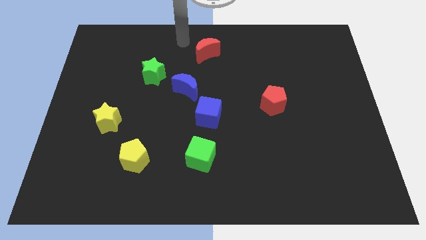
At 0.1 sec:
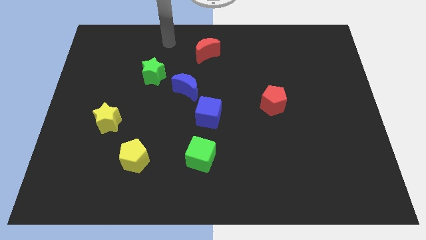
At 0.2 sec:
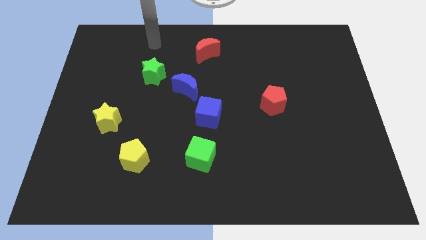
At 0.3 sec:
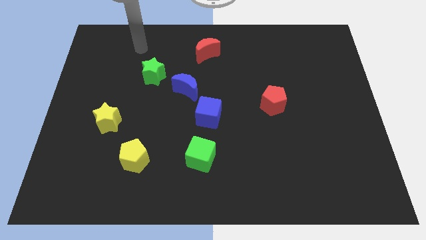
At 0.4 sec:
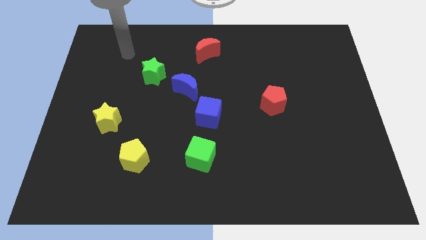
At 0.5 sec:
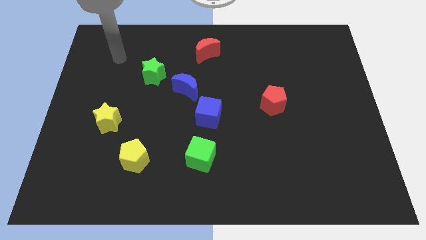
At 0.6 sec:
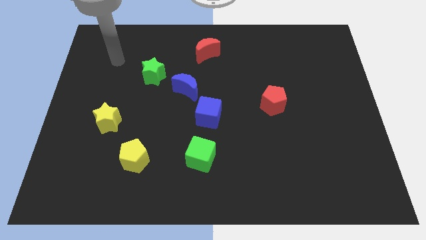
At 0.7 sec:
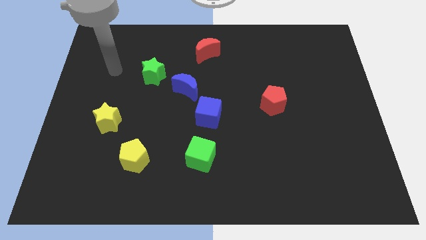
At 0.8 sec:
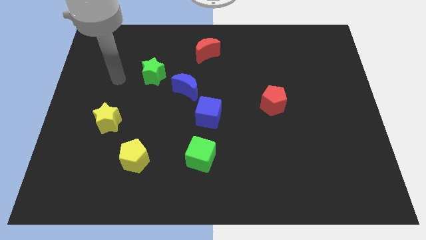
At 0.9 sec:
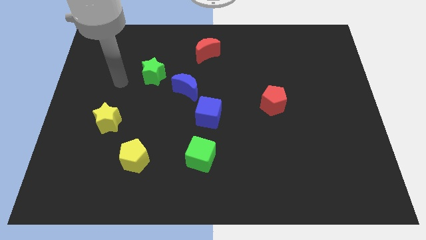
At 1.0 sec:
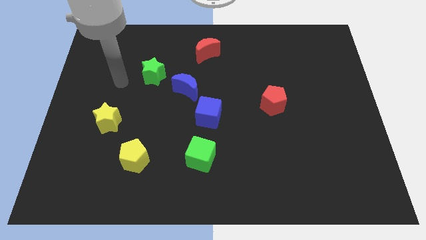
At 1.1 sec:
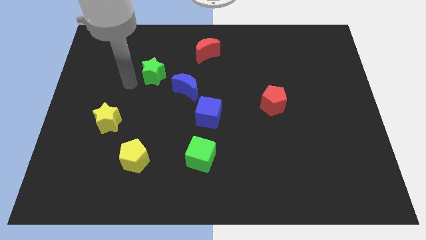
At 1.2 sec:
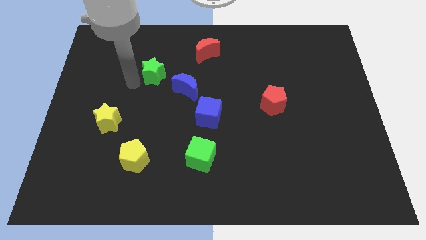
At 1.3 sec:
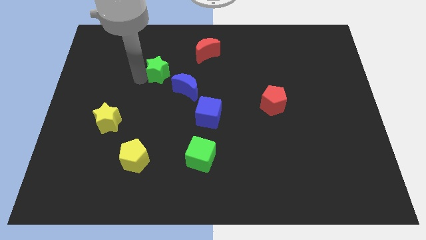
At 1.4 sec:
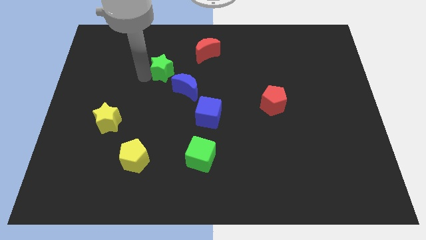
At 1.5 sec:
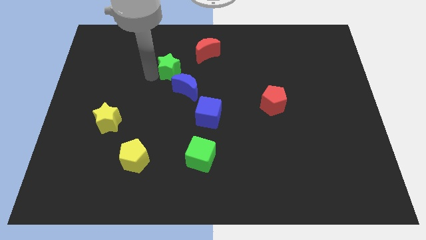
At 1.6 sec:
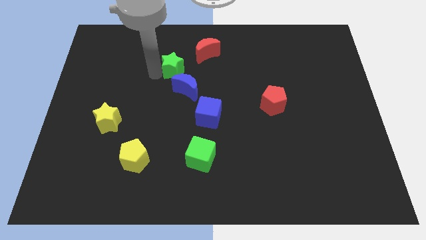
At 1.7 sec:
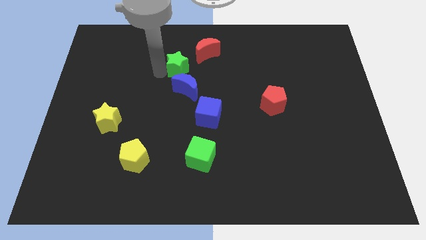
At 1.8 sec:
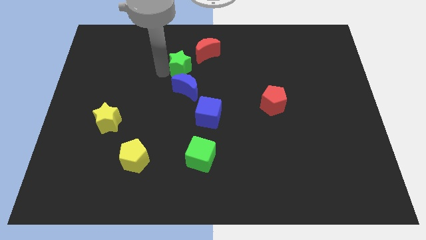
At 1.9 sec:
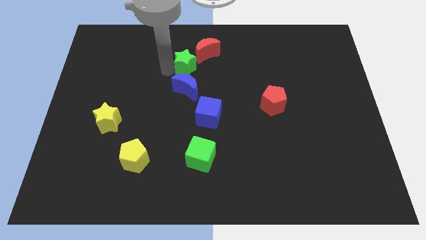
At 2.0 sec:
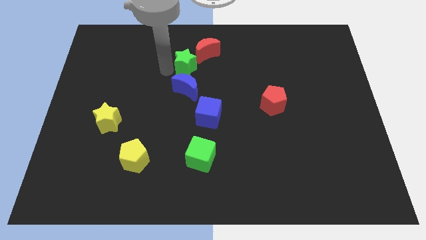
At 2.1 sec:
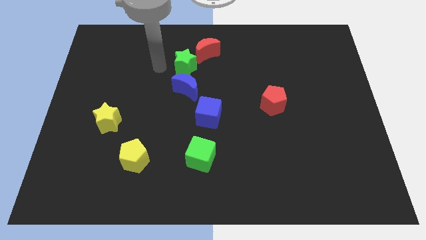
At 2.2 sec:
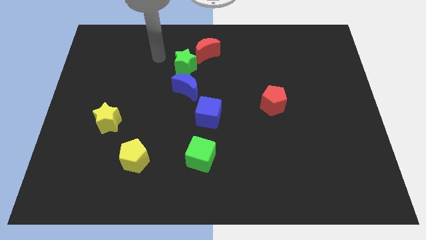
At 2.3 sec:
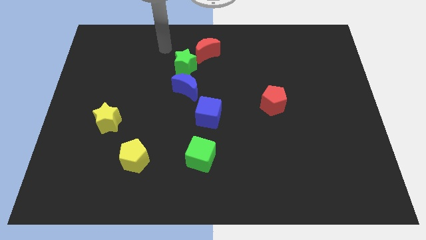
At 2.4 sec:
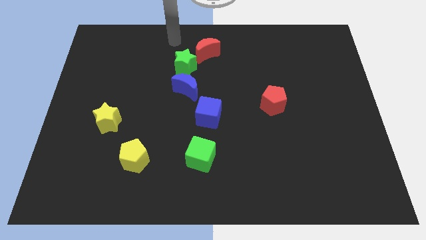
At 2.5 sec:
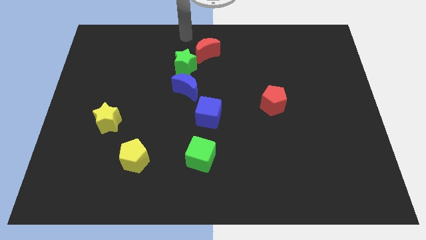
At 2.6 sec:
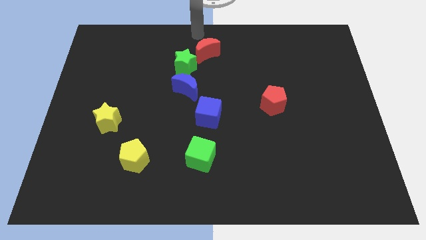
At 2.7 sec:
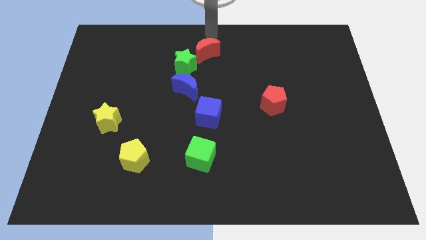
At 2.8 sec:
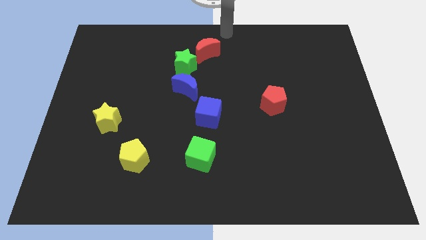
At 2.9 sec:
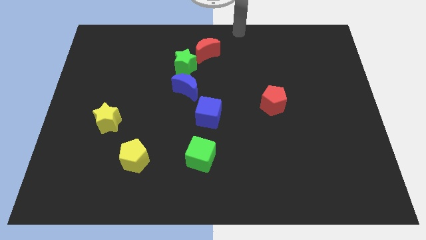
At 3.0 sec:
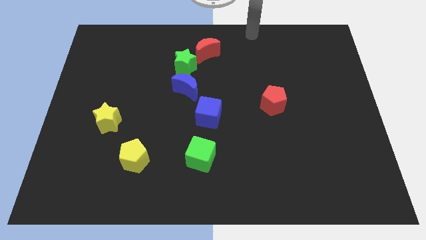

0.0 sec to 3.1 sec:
place the green star into the red crescent

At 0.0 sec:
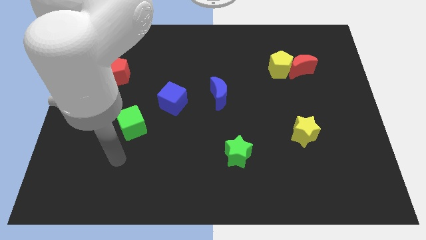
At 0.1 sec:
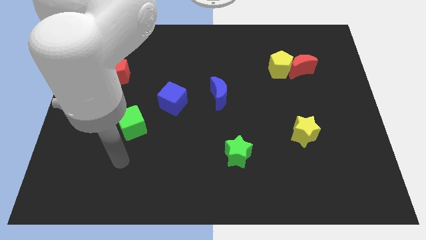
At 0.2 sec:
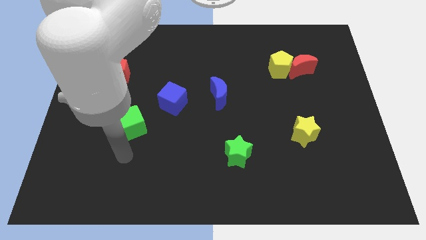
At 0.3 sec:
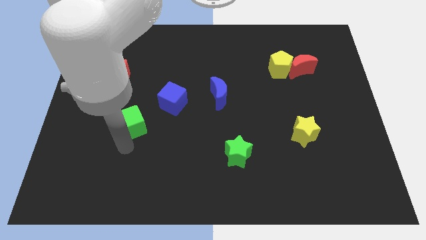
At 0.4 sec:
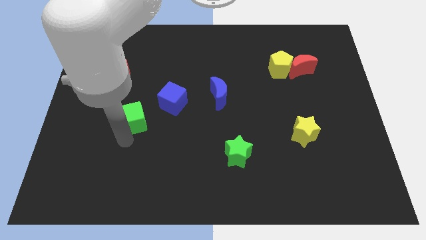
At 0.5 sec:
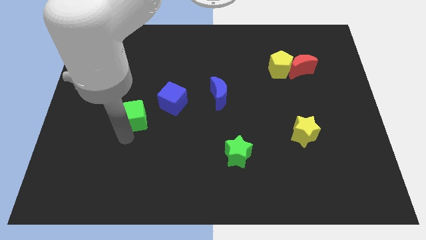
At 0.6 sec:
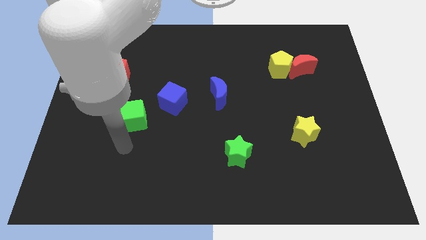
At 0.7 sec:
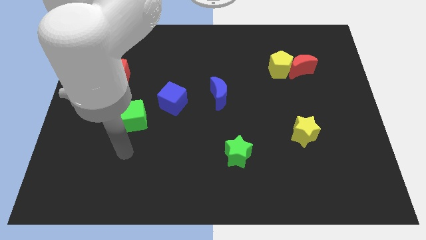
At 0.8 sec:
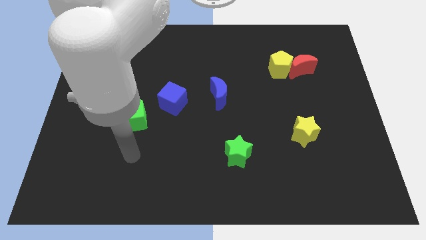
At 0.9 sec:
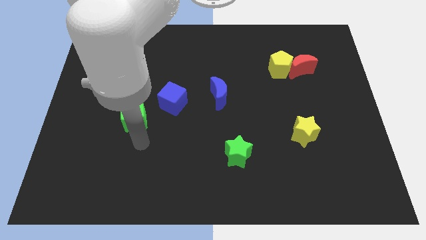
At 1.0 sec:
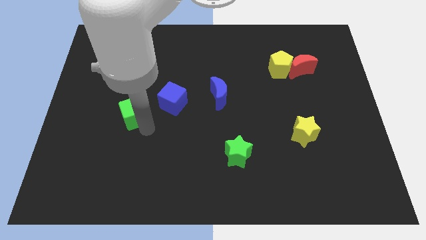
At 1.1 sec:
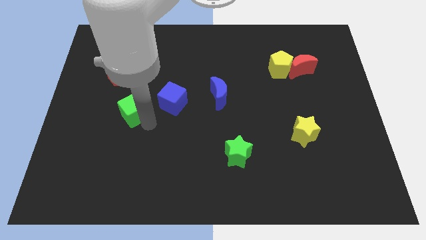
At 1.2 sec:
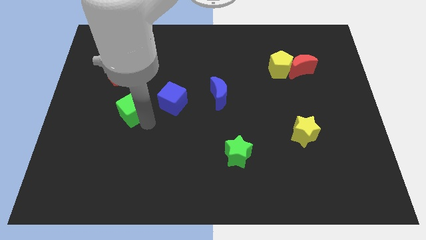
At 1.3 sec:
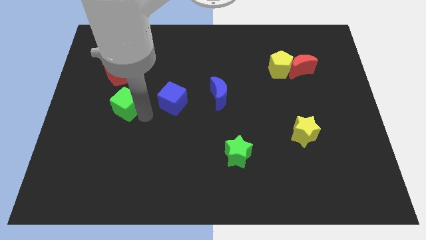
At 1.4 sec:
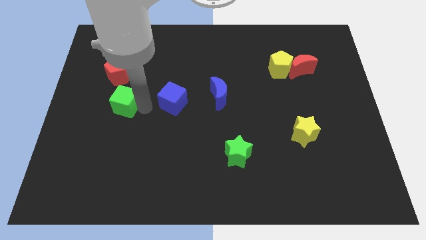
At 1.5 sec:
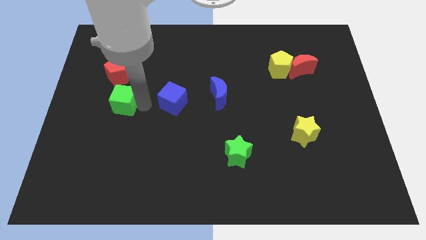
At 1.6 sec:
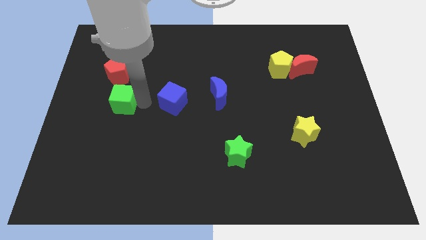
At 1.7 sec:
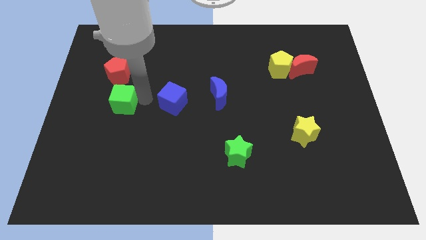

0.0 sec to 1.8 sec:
place green cube below red pentagon

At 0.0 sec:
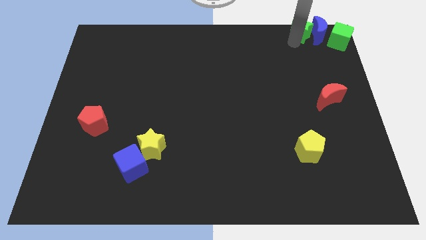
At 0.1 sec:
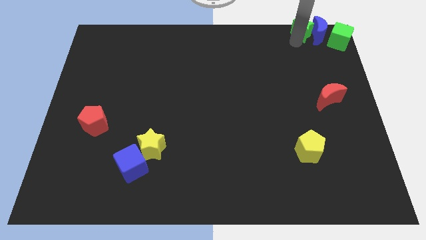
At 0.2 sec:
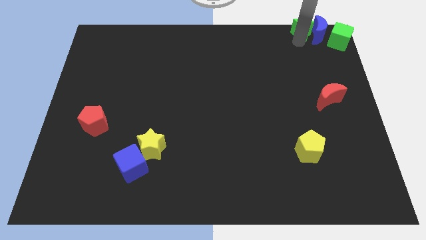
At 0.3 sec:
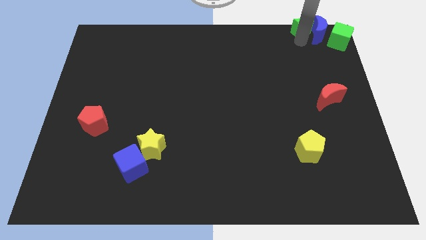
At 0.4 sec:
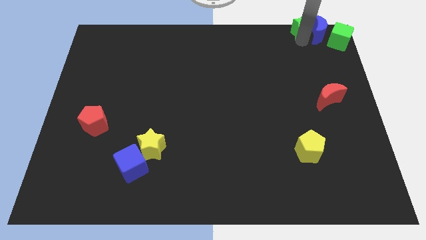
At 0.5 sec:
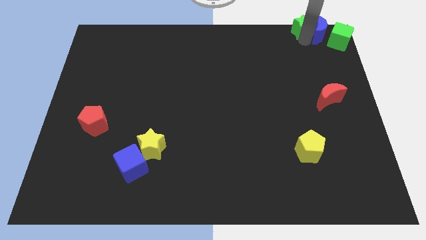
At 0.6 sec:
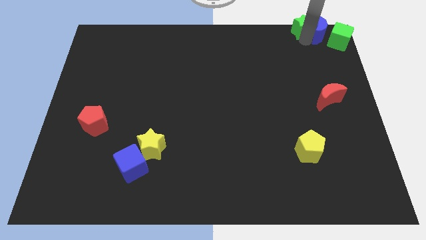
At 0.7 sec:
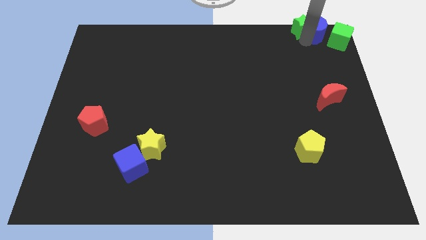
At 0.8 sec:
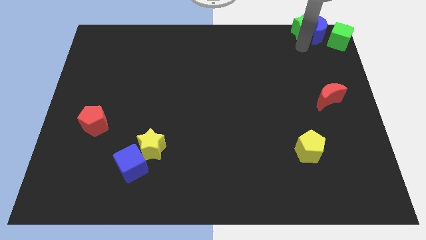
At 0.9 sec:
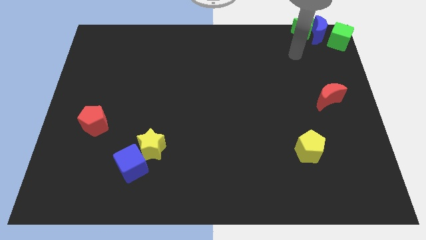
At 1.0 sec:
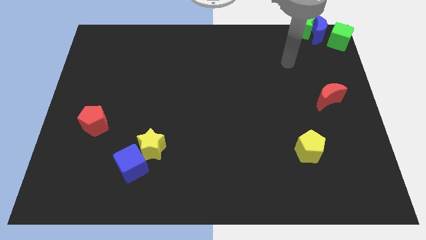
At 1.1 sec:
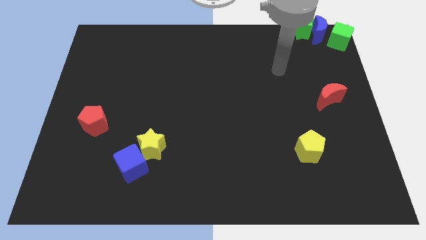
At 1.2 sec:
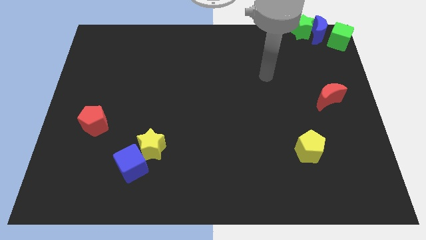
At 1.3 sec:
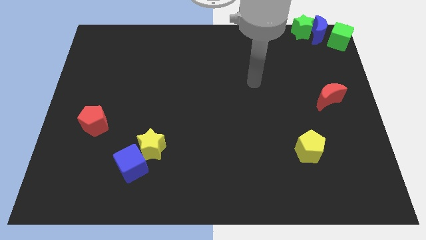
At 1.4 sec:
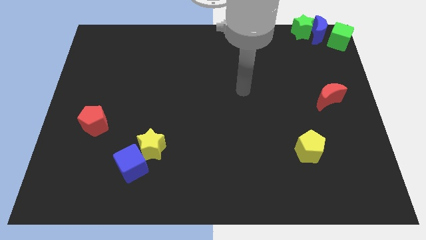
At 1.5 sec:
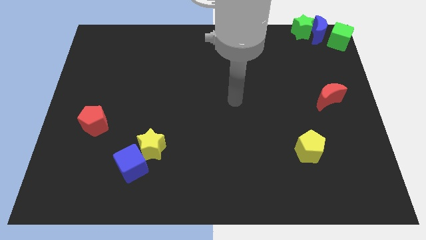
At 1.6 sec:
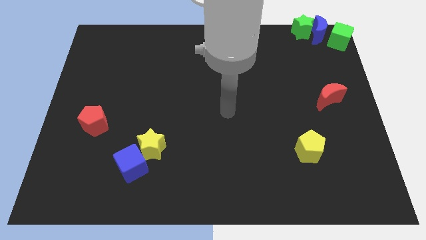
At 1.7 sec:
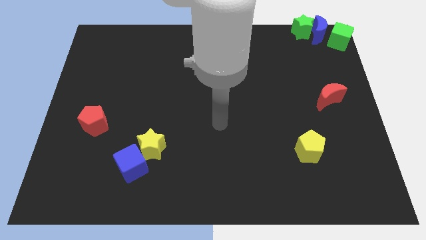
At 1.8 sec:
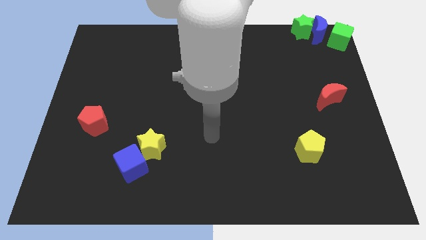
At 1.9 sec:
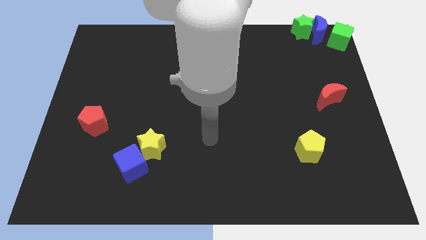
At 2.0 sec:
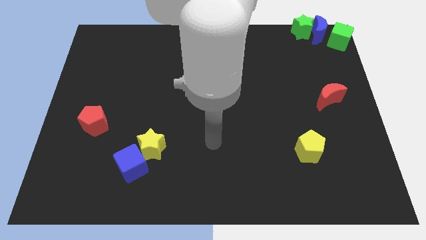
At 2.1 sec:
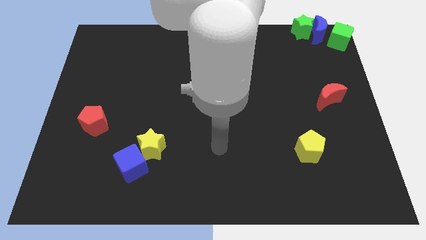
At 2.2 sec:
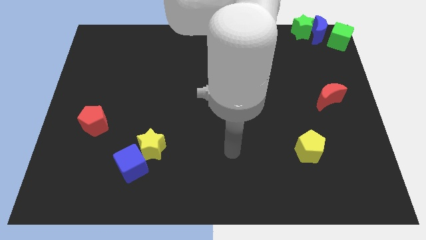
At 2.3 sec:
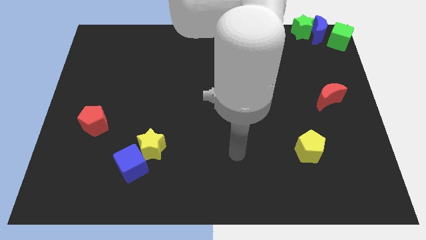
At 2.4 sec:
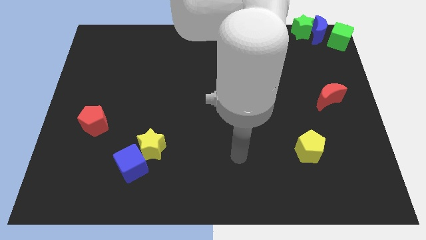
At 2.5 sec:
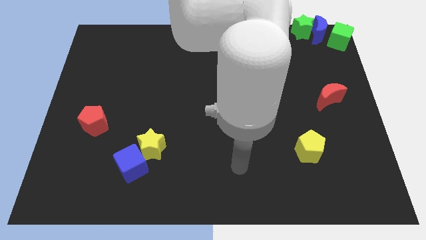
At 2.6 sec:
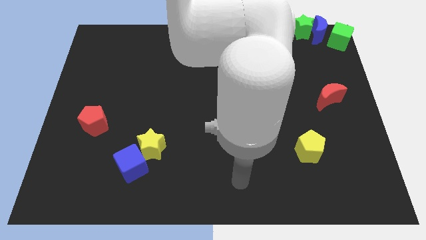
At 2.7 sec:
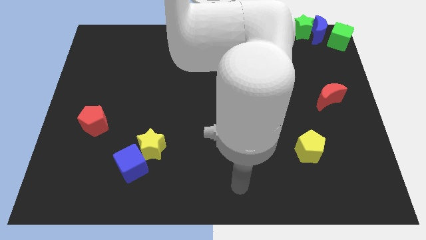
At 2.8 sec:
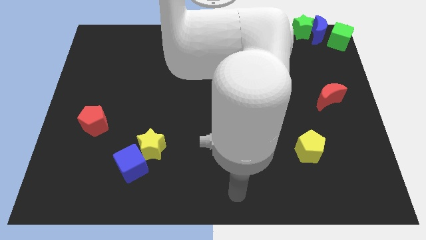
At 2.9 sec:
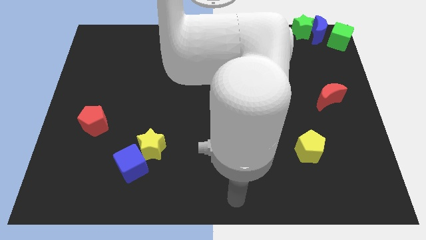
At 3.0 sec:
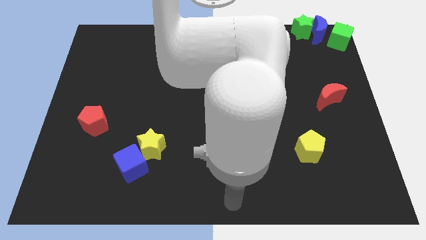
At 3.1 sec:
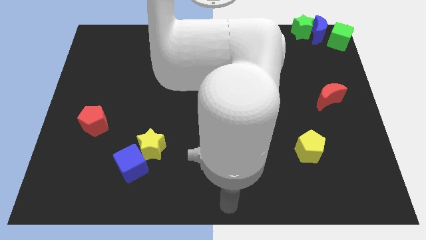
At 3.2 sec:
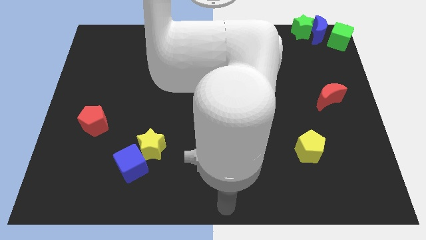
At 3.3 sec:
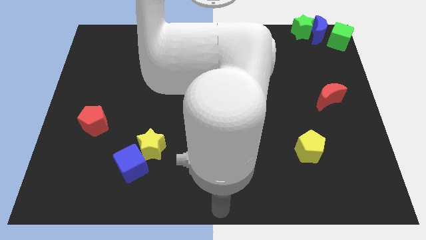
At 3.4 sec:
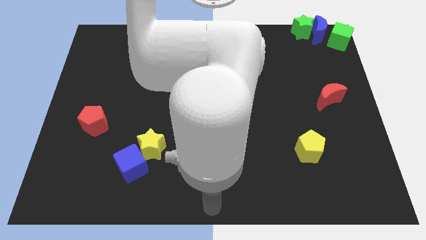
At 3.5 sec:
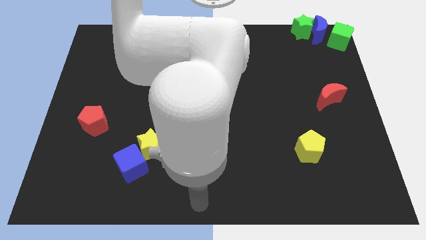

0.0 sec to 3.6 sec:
move your arm to the bottom centre of the board

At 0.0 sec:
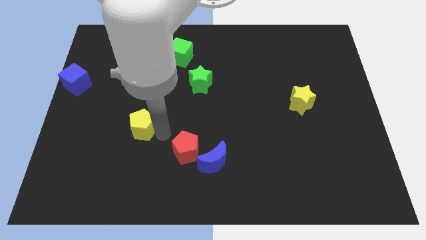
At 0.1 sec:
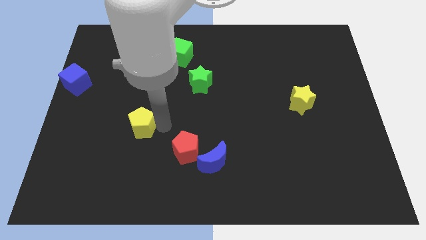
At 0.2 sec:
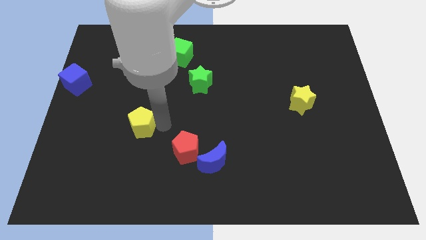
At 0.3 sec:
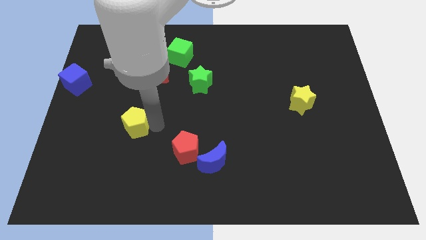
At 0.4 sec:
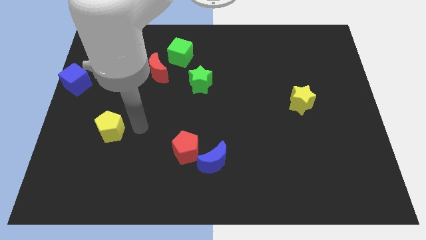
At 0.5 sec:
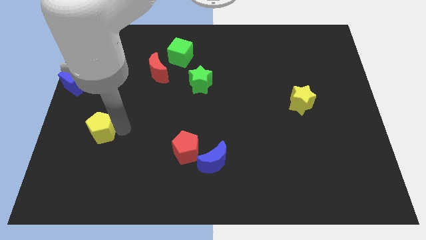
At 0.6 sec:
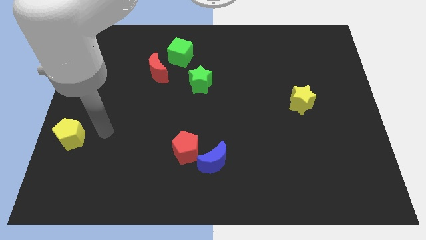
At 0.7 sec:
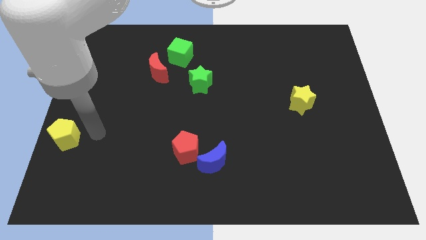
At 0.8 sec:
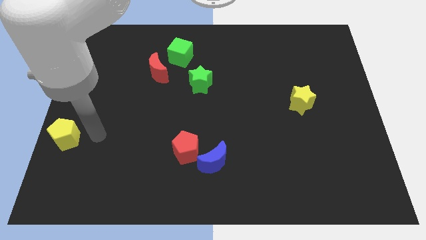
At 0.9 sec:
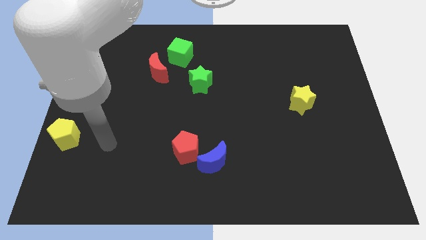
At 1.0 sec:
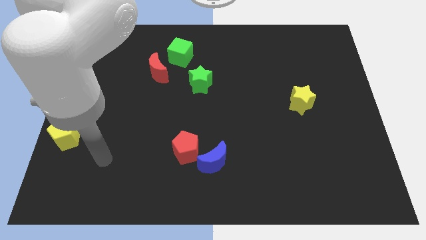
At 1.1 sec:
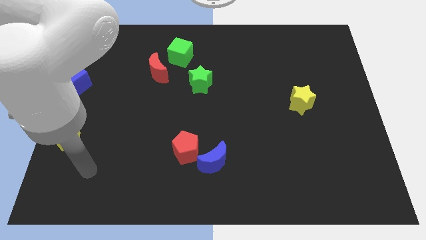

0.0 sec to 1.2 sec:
move the yellow pentagon to the left corner
